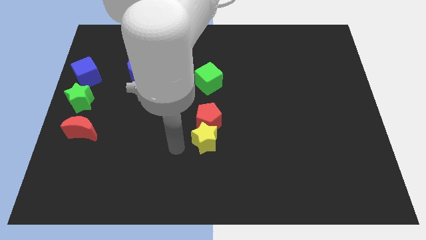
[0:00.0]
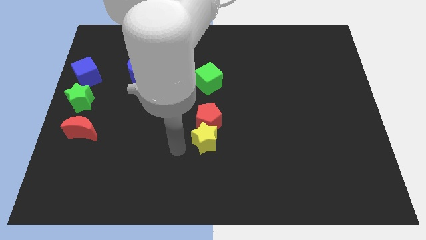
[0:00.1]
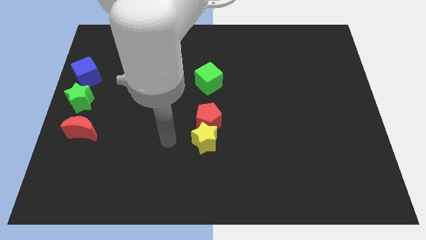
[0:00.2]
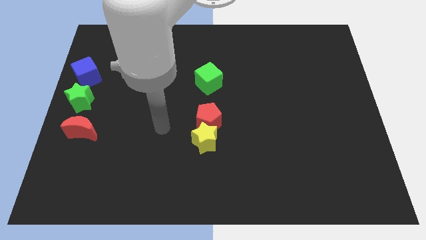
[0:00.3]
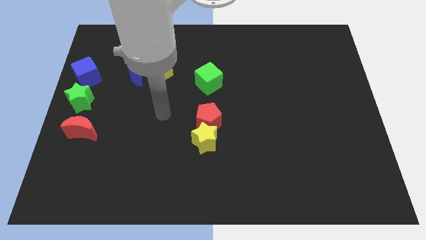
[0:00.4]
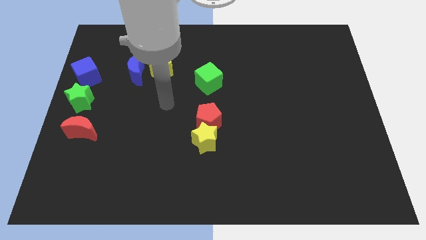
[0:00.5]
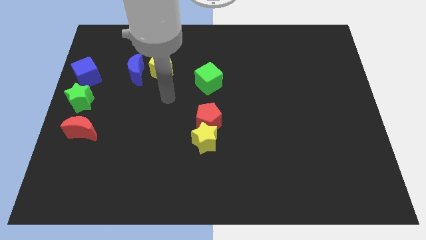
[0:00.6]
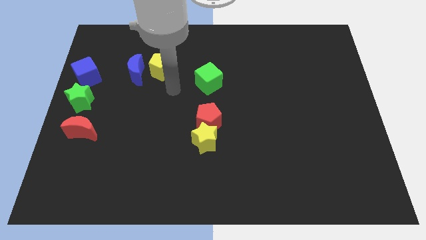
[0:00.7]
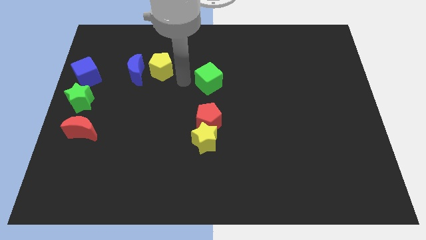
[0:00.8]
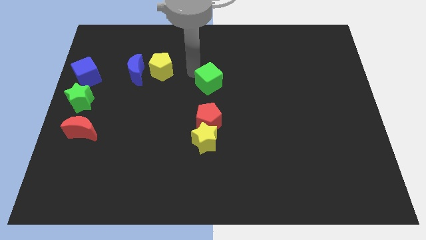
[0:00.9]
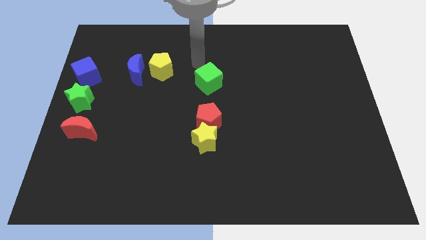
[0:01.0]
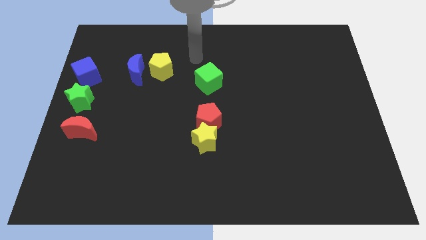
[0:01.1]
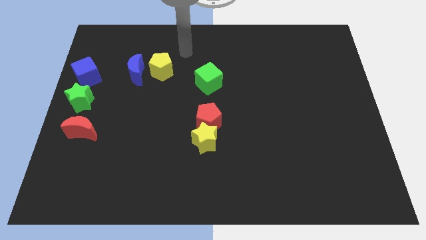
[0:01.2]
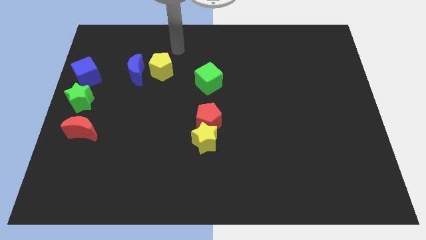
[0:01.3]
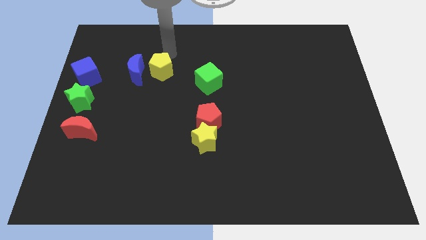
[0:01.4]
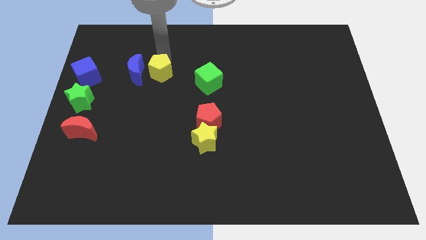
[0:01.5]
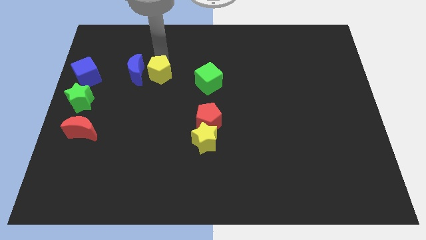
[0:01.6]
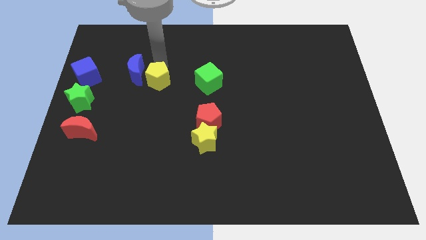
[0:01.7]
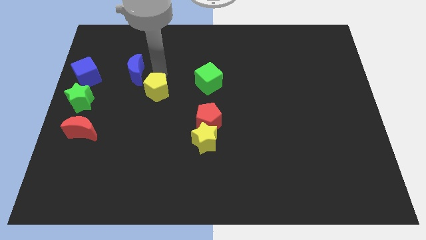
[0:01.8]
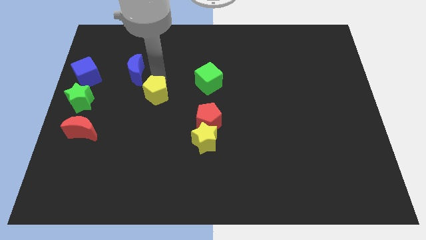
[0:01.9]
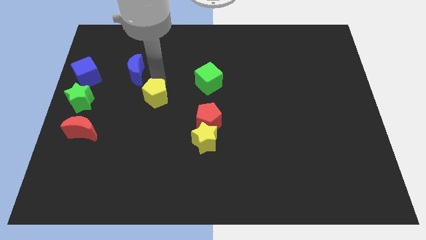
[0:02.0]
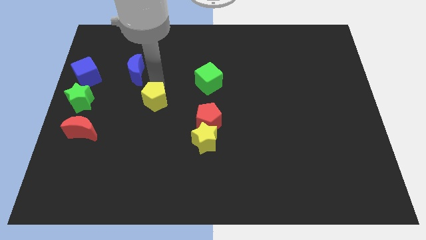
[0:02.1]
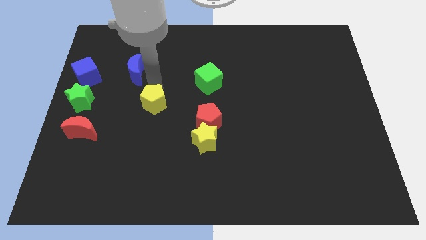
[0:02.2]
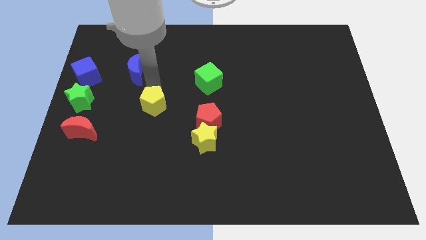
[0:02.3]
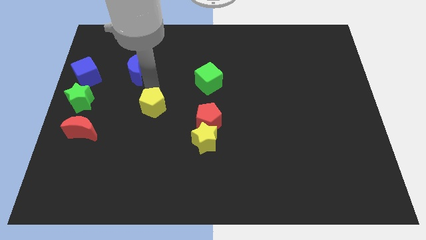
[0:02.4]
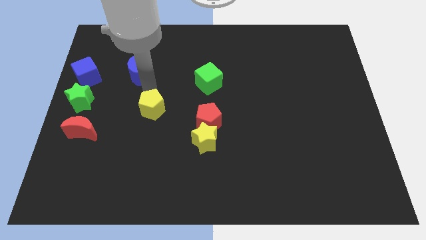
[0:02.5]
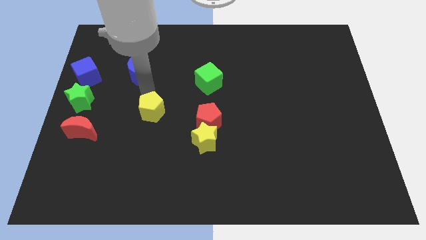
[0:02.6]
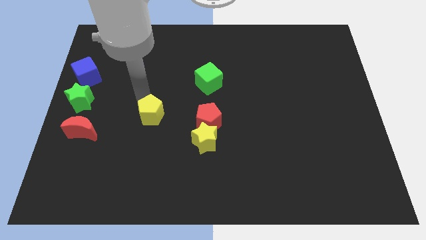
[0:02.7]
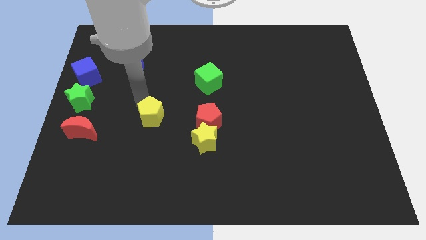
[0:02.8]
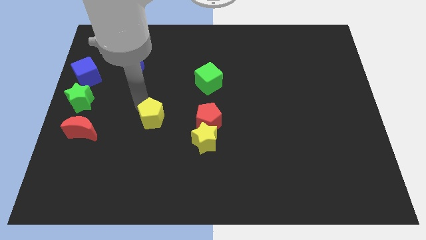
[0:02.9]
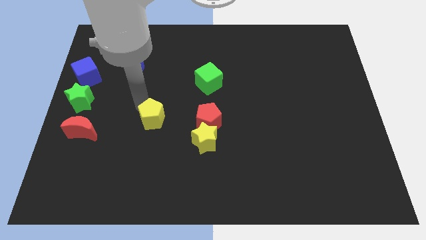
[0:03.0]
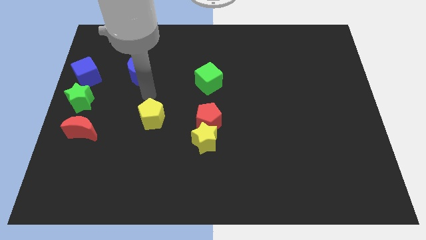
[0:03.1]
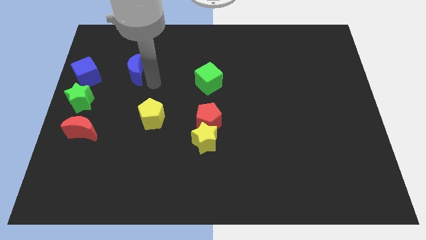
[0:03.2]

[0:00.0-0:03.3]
place the yellow pentagon at left side of the red pentagon

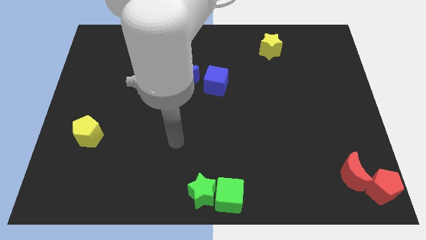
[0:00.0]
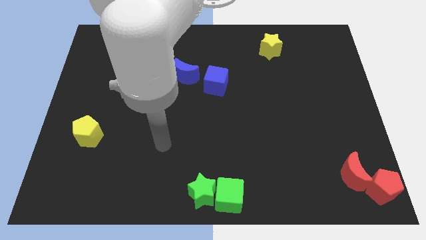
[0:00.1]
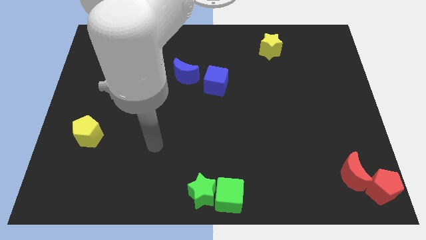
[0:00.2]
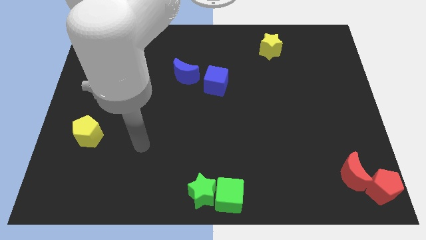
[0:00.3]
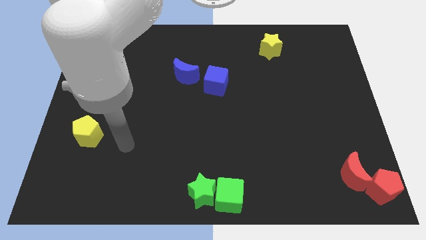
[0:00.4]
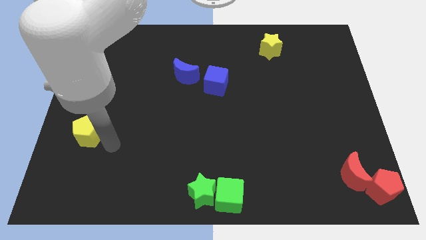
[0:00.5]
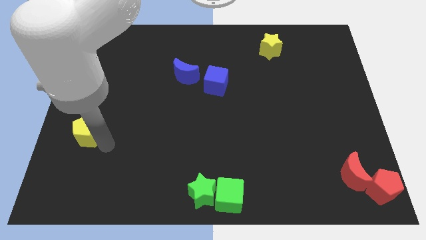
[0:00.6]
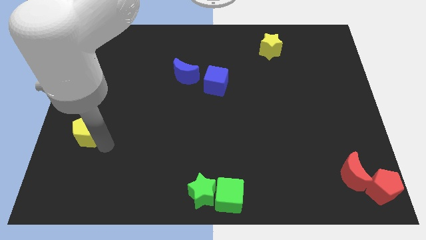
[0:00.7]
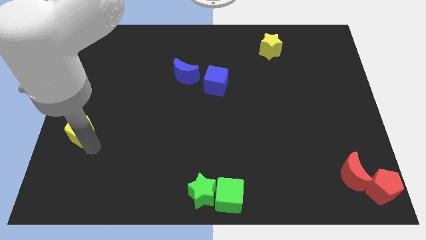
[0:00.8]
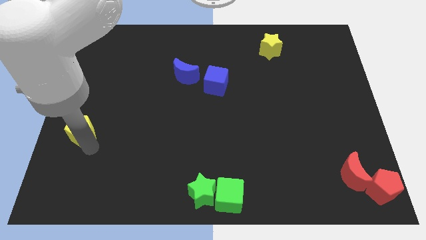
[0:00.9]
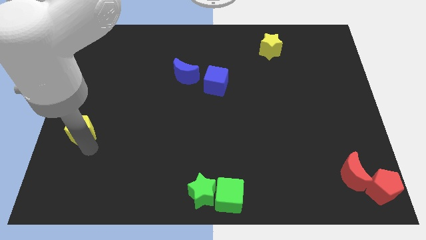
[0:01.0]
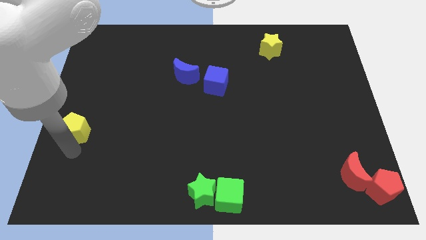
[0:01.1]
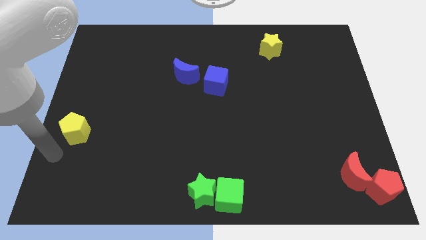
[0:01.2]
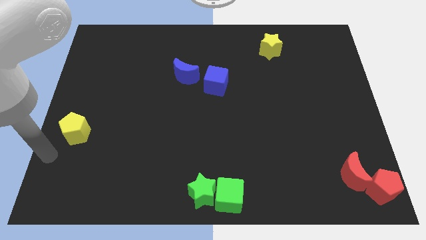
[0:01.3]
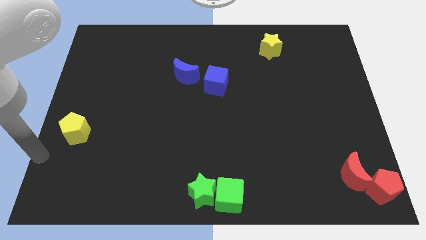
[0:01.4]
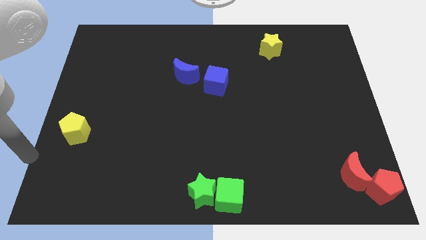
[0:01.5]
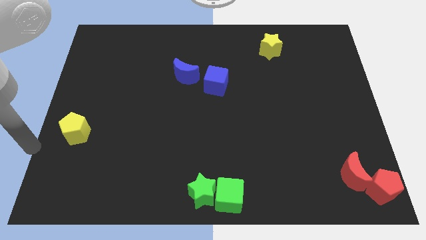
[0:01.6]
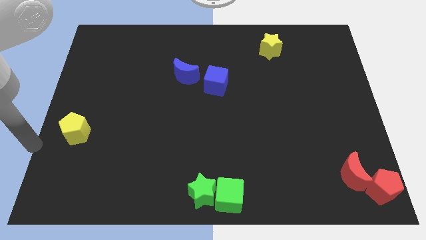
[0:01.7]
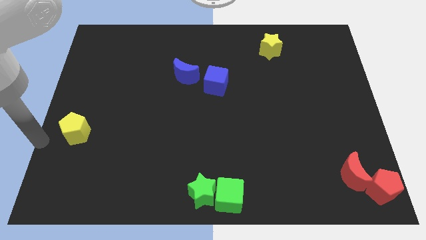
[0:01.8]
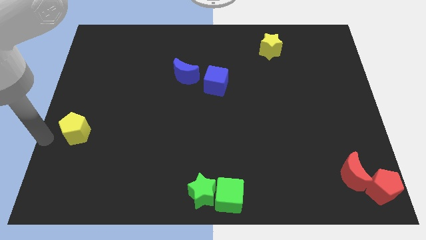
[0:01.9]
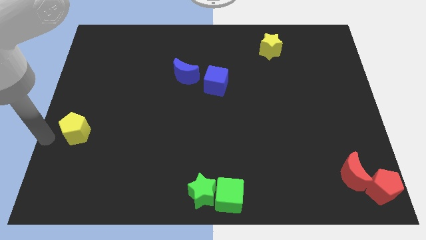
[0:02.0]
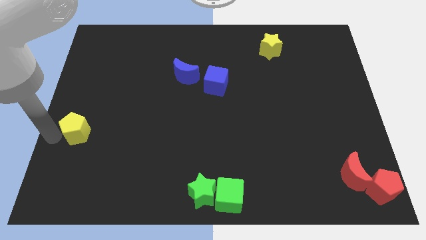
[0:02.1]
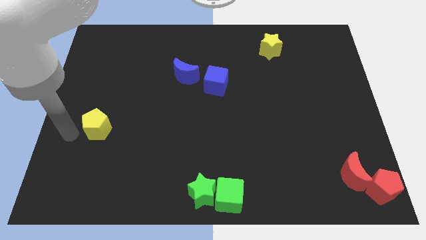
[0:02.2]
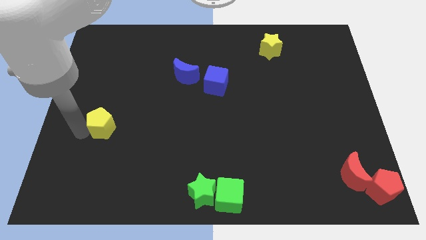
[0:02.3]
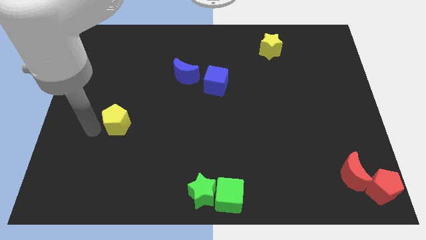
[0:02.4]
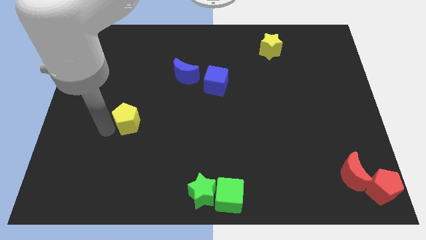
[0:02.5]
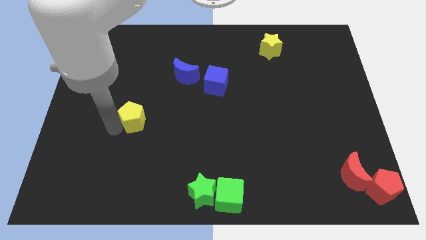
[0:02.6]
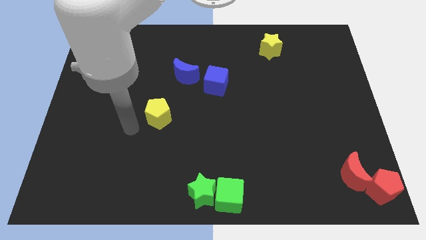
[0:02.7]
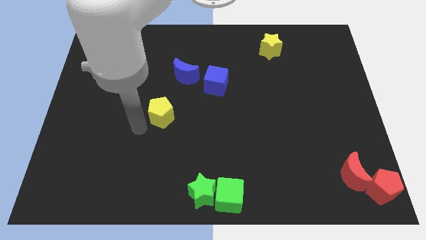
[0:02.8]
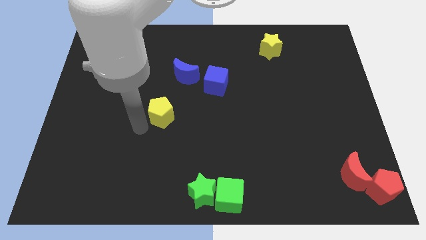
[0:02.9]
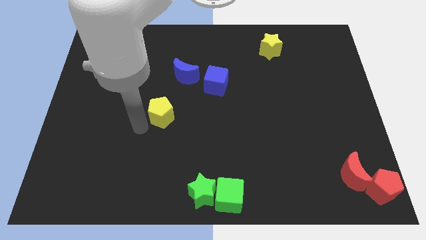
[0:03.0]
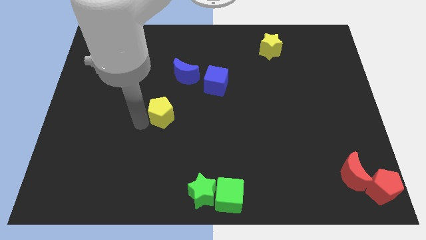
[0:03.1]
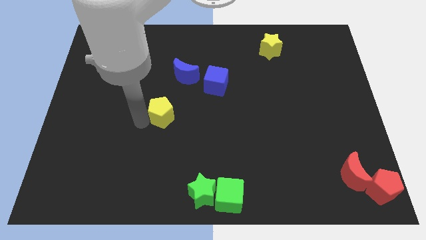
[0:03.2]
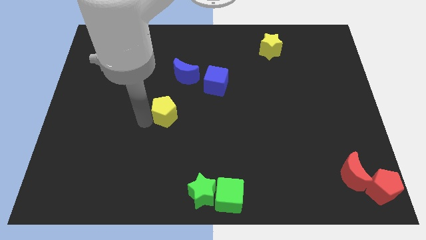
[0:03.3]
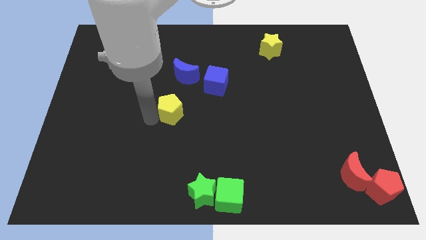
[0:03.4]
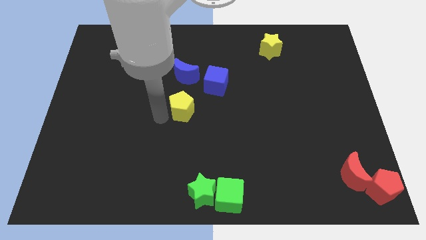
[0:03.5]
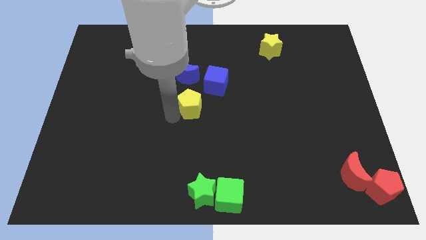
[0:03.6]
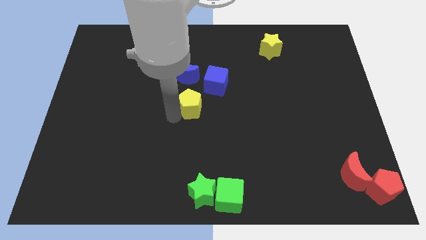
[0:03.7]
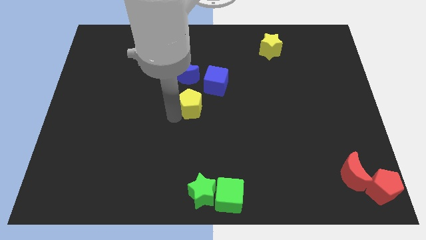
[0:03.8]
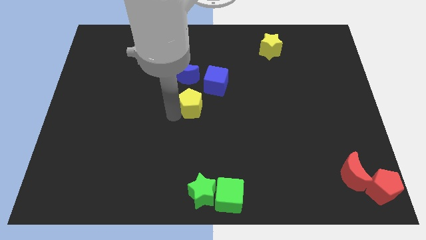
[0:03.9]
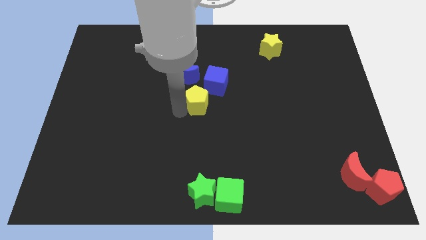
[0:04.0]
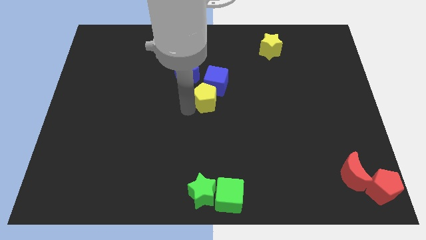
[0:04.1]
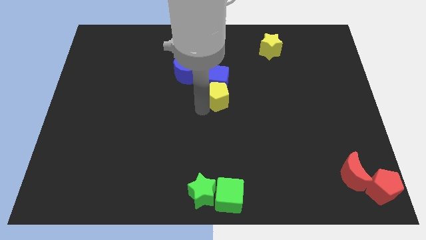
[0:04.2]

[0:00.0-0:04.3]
place yellow pentagon below blue cube

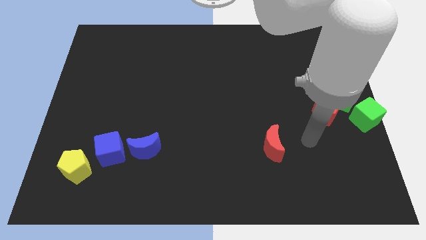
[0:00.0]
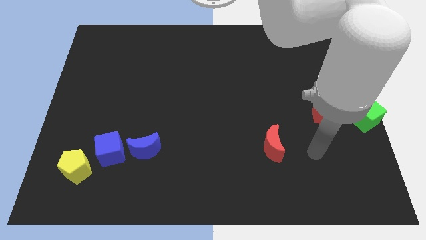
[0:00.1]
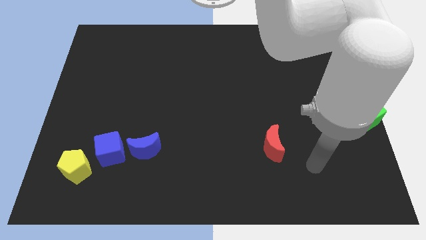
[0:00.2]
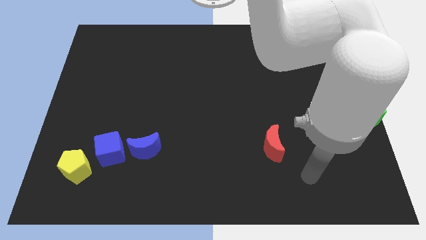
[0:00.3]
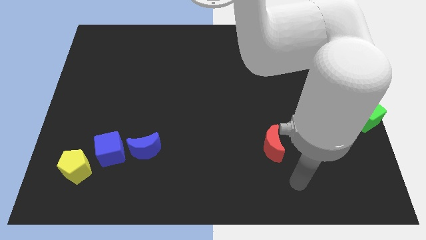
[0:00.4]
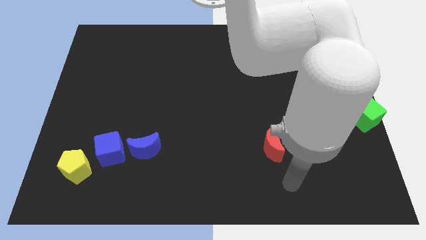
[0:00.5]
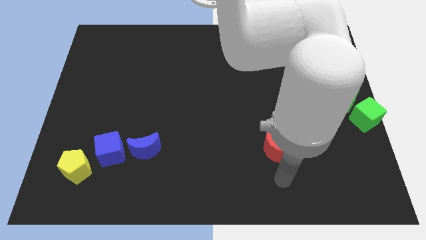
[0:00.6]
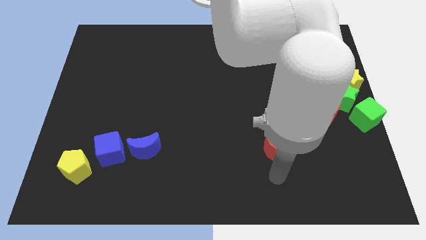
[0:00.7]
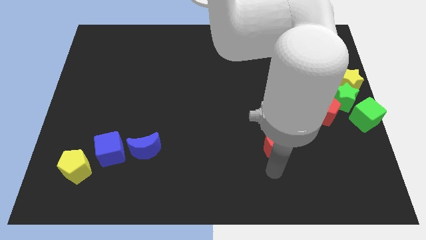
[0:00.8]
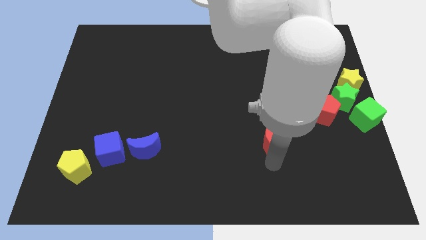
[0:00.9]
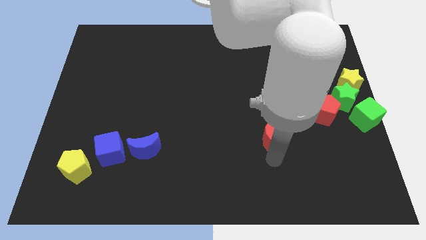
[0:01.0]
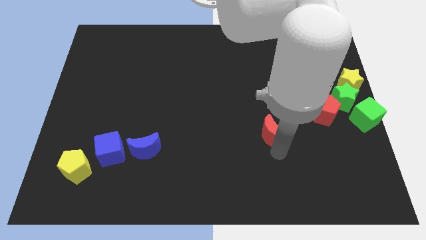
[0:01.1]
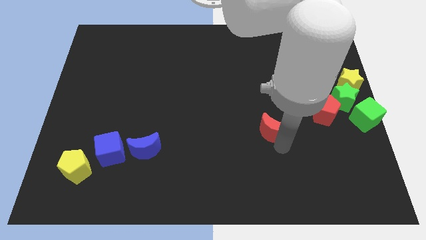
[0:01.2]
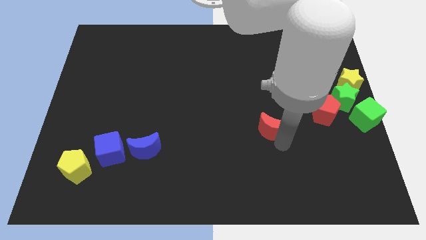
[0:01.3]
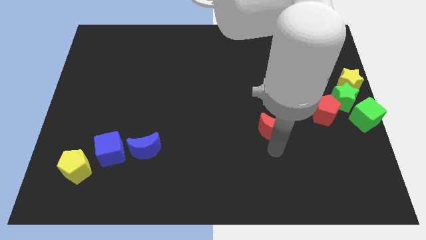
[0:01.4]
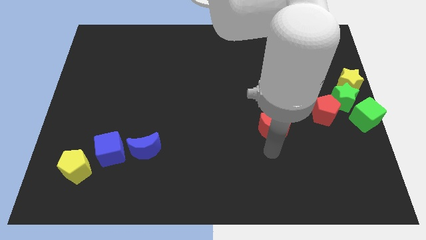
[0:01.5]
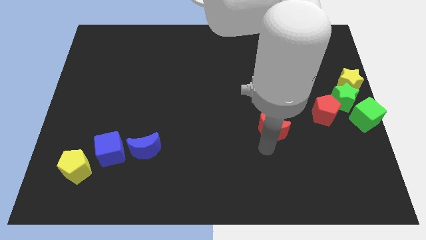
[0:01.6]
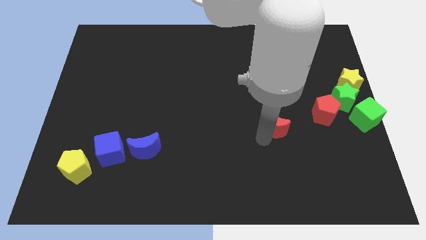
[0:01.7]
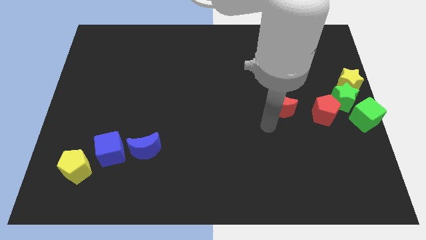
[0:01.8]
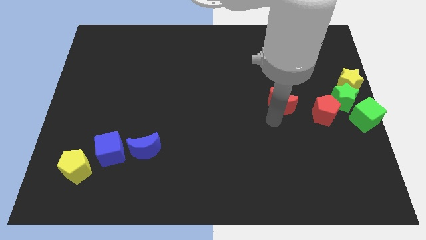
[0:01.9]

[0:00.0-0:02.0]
move the red crescent to the left of the red pentagon
